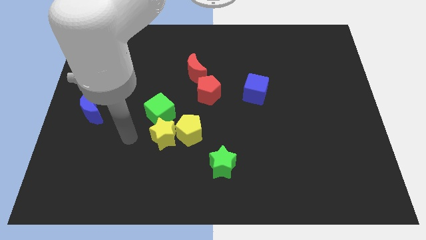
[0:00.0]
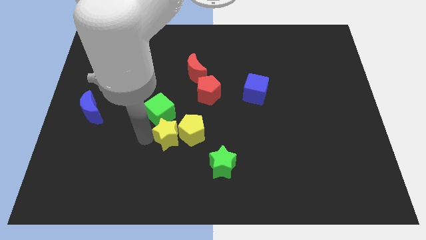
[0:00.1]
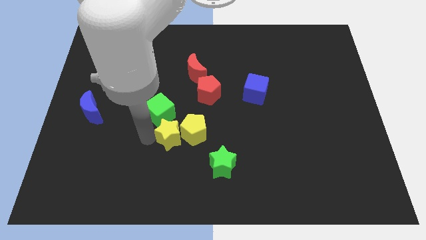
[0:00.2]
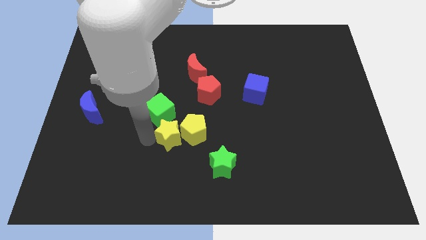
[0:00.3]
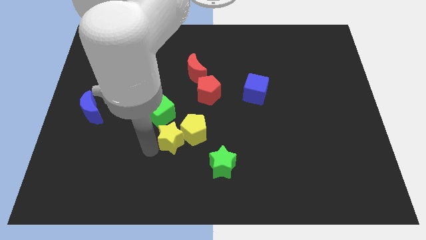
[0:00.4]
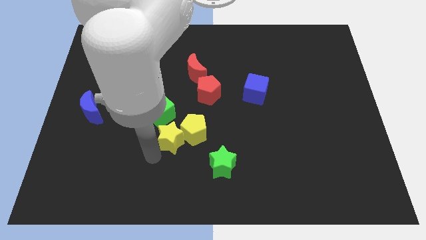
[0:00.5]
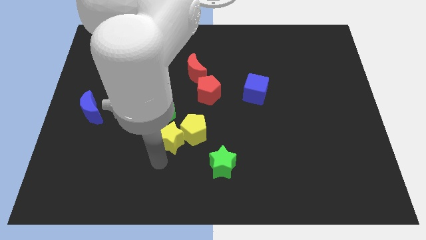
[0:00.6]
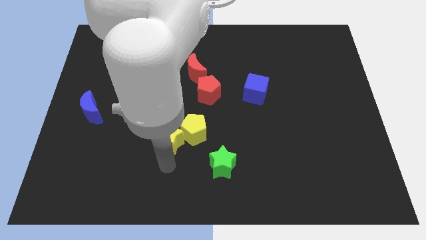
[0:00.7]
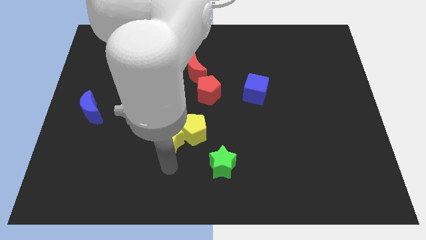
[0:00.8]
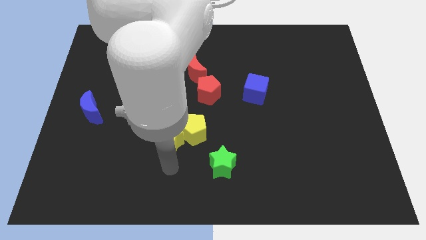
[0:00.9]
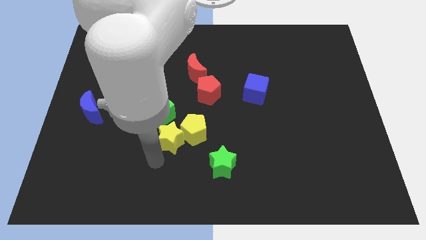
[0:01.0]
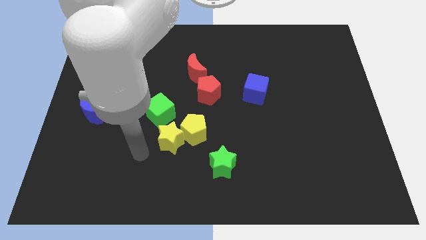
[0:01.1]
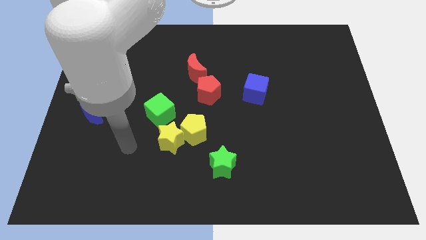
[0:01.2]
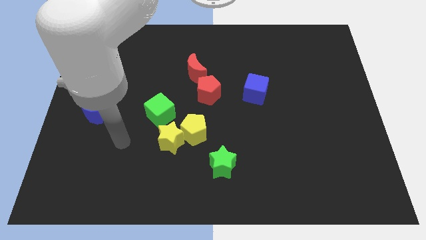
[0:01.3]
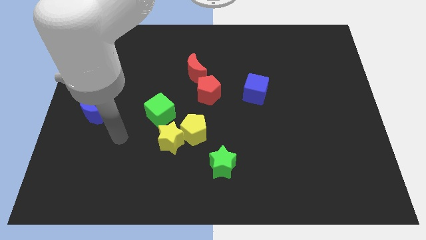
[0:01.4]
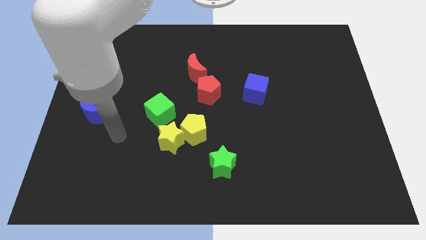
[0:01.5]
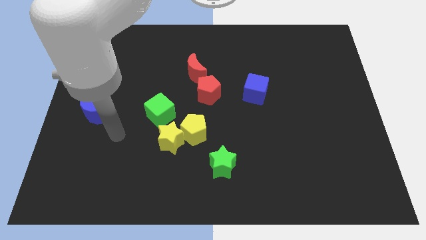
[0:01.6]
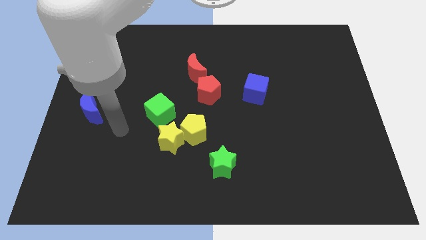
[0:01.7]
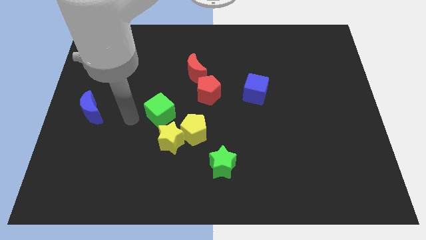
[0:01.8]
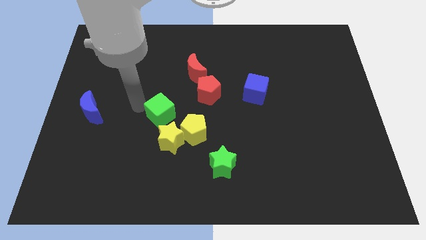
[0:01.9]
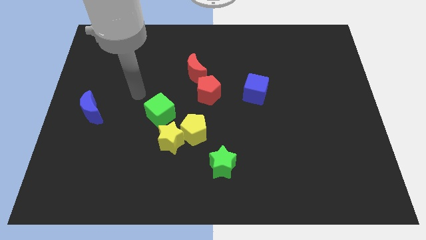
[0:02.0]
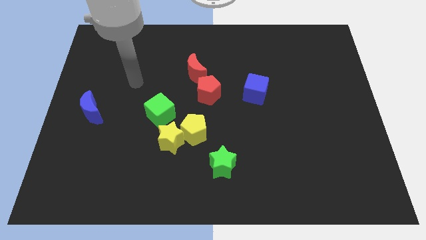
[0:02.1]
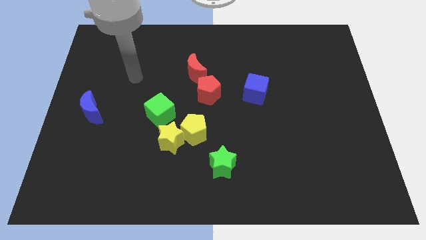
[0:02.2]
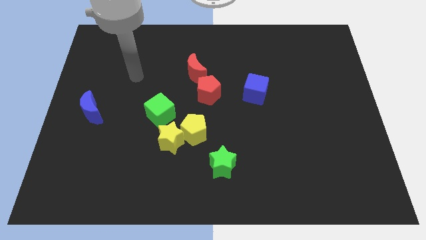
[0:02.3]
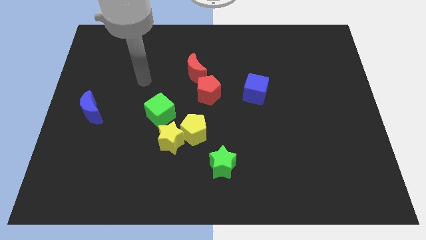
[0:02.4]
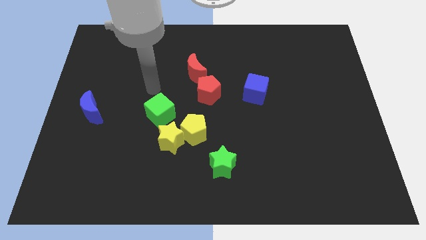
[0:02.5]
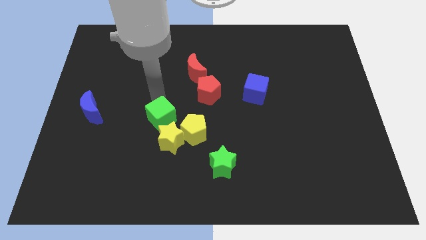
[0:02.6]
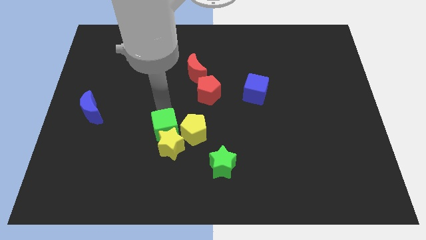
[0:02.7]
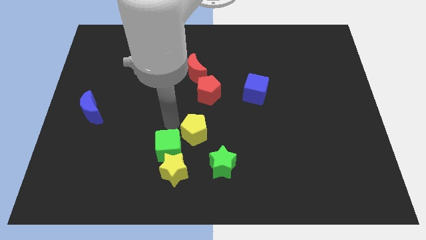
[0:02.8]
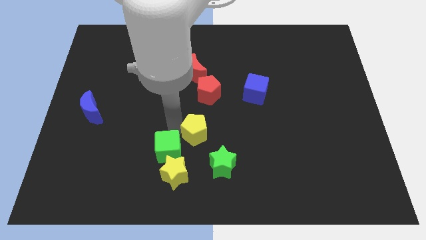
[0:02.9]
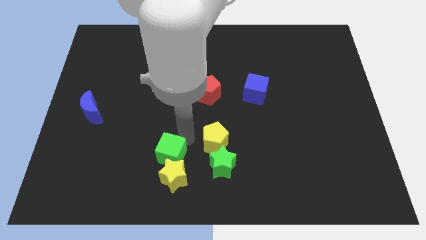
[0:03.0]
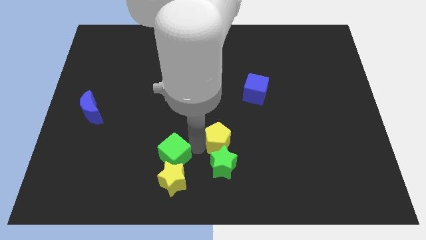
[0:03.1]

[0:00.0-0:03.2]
slightly push the green cube towards the yellow star and yellow pentagon

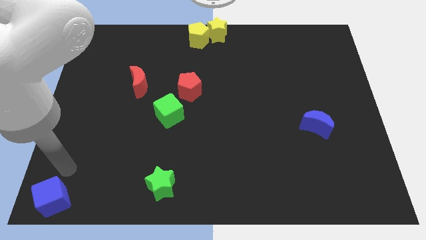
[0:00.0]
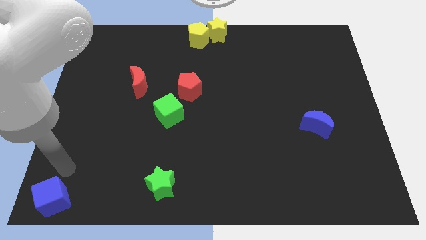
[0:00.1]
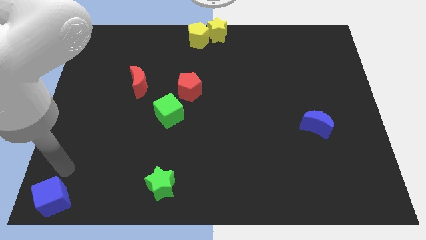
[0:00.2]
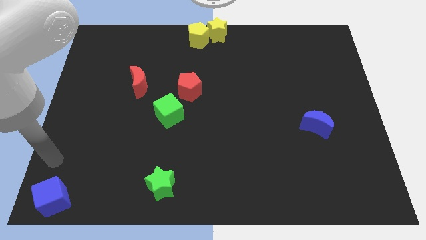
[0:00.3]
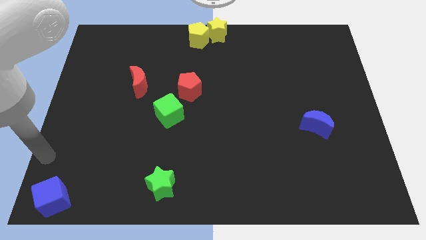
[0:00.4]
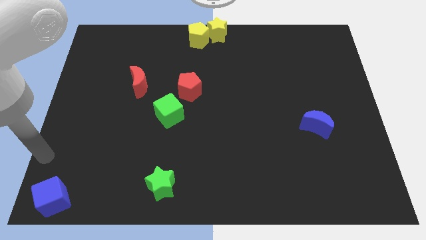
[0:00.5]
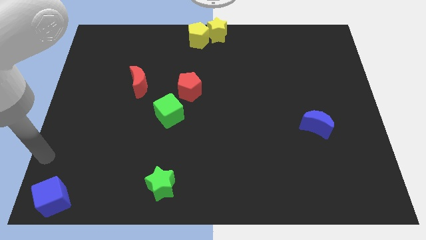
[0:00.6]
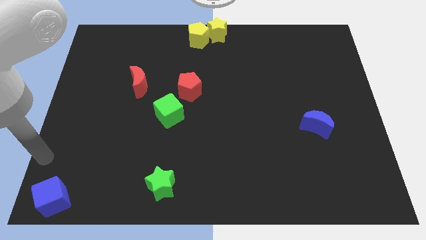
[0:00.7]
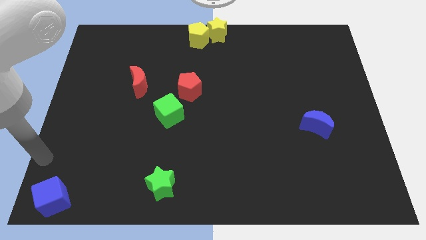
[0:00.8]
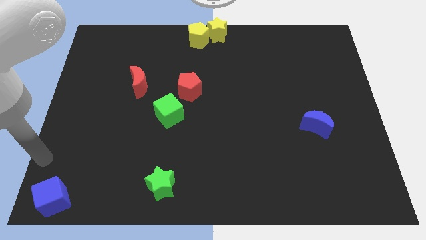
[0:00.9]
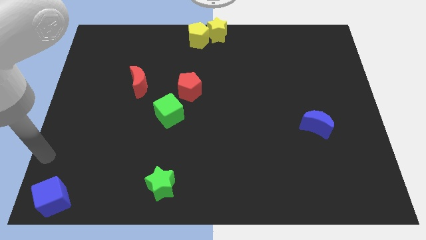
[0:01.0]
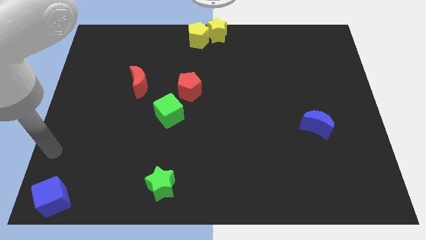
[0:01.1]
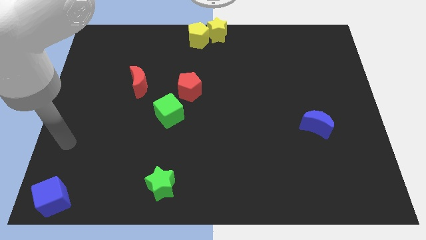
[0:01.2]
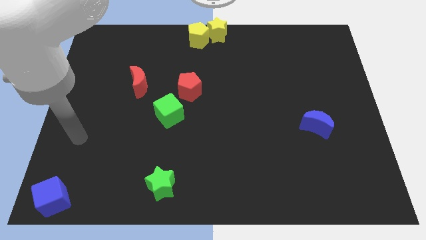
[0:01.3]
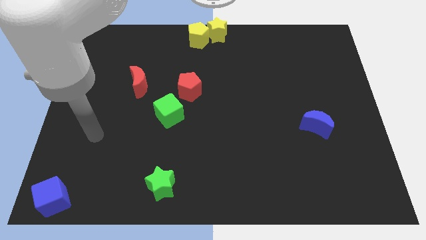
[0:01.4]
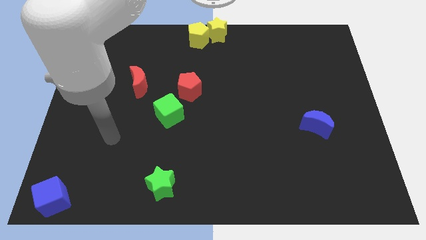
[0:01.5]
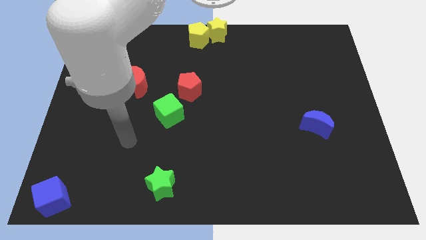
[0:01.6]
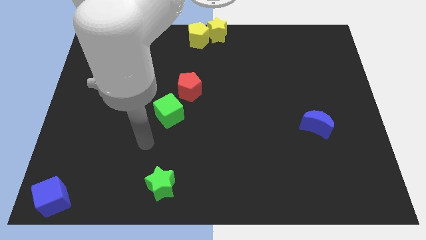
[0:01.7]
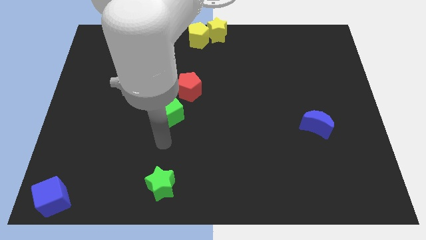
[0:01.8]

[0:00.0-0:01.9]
point your arm between green blocks

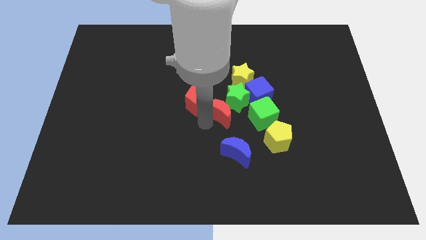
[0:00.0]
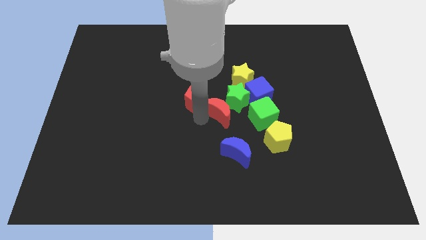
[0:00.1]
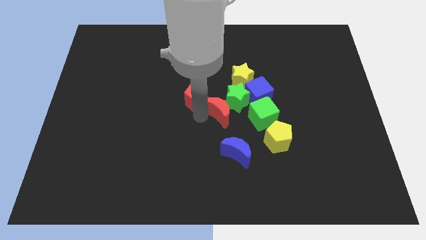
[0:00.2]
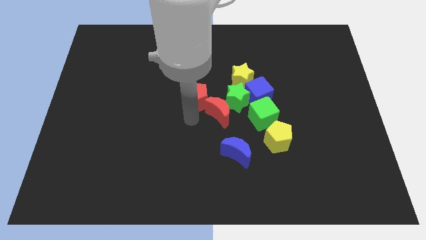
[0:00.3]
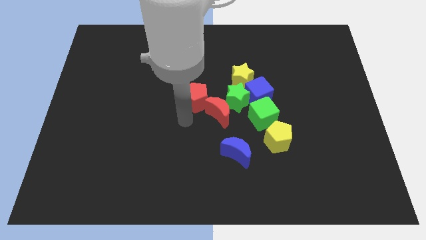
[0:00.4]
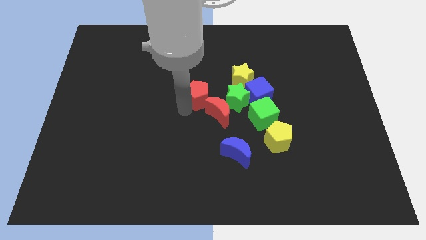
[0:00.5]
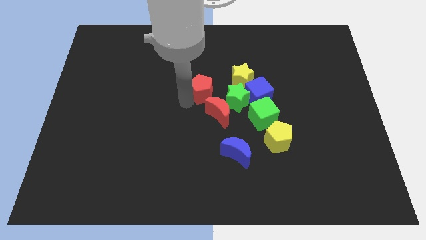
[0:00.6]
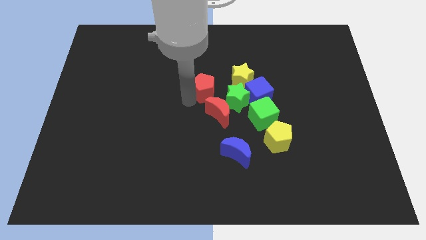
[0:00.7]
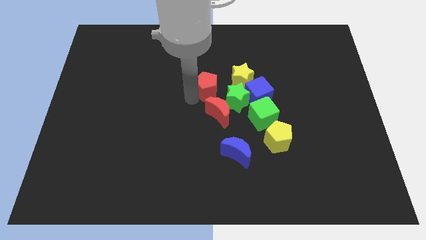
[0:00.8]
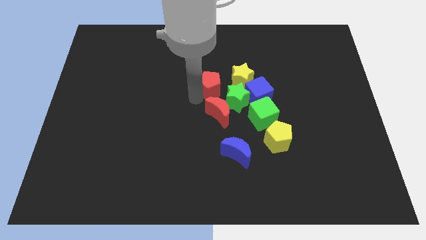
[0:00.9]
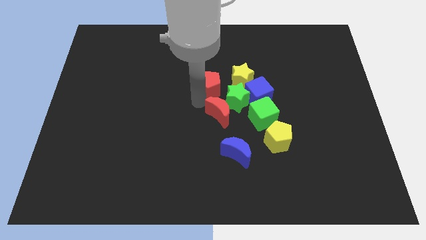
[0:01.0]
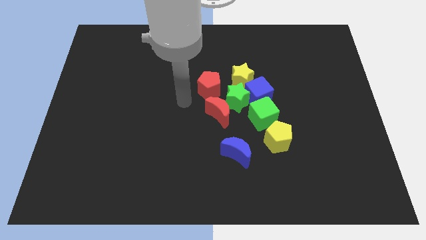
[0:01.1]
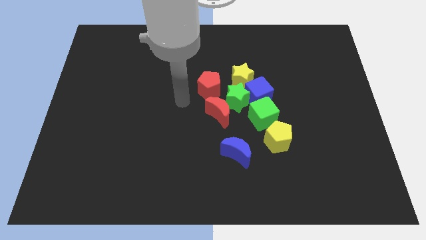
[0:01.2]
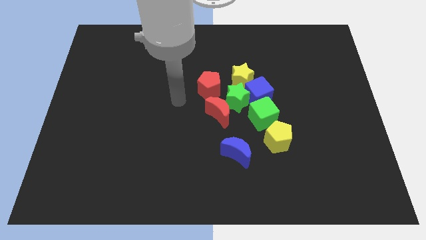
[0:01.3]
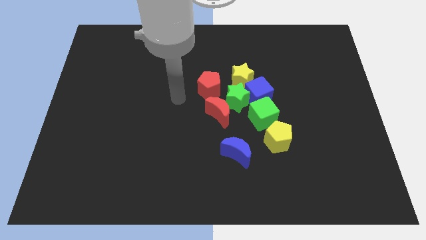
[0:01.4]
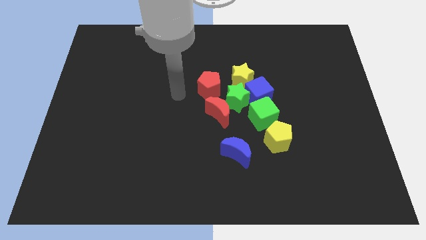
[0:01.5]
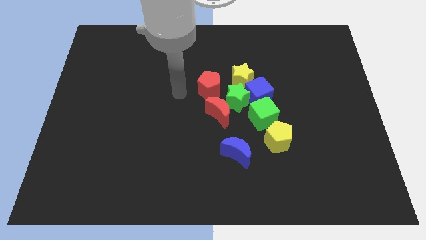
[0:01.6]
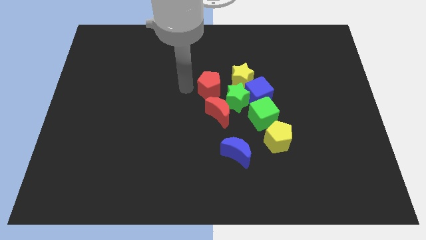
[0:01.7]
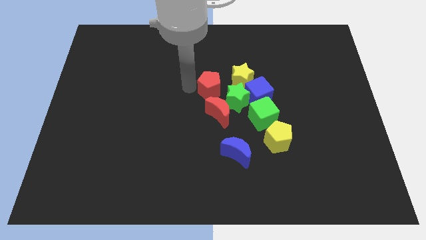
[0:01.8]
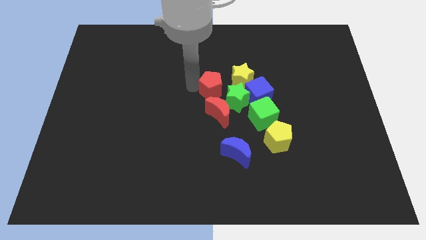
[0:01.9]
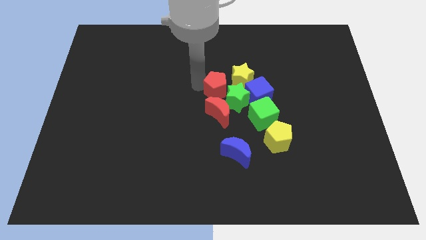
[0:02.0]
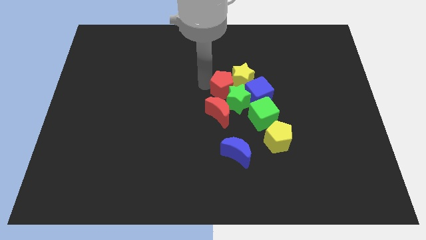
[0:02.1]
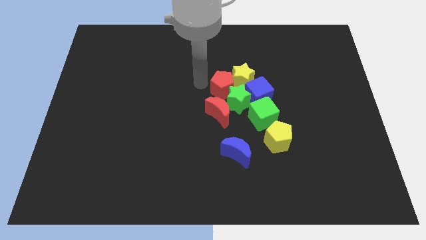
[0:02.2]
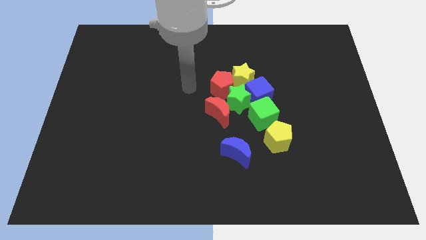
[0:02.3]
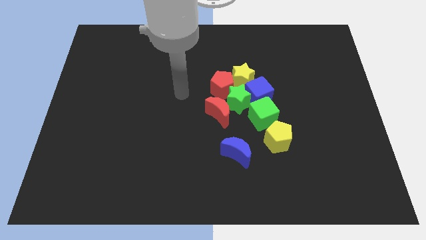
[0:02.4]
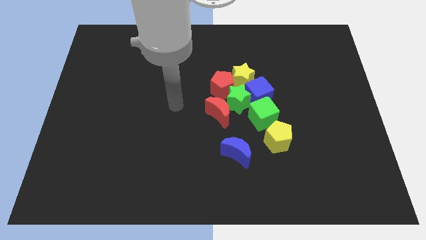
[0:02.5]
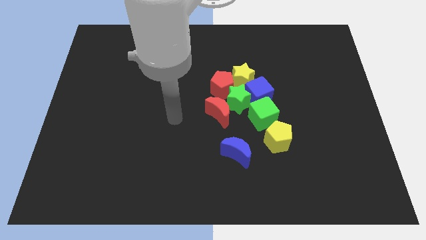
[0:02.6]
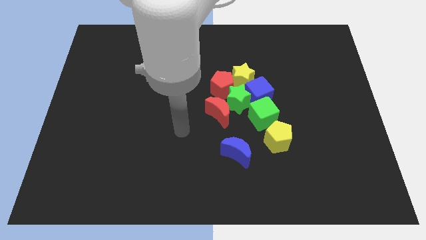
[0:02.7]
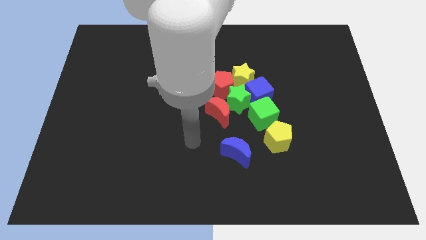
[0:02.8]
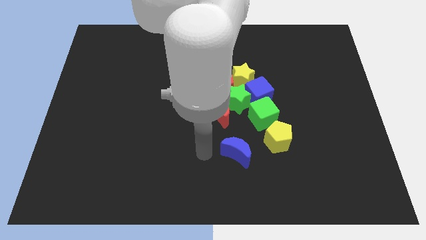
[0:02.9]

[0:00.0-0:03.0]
place the red pentagon on top of the red crescent

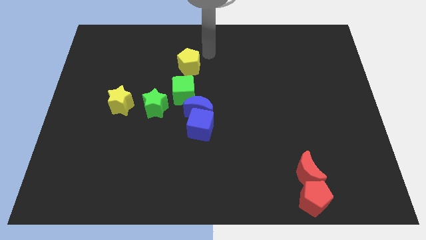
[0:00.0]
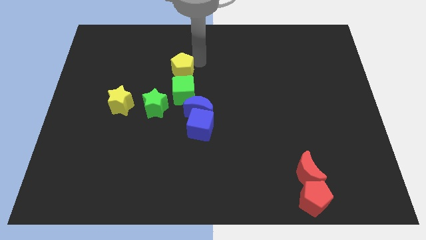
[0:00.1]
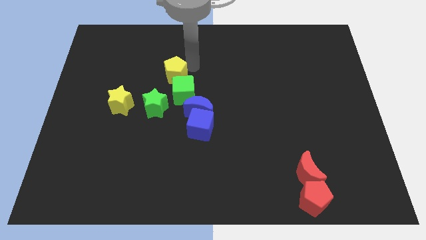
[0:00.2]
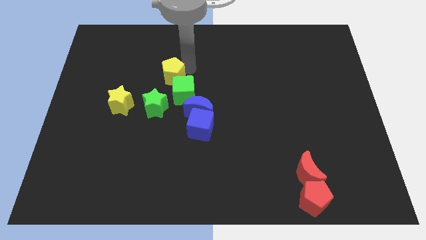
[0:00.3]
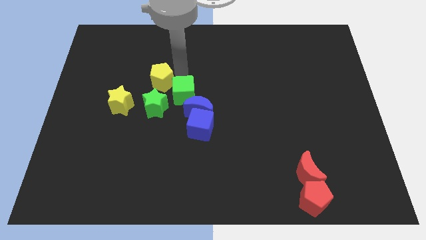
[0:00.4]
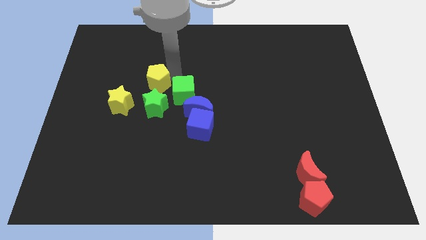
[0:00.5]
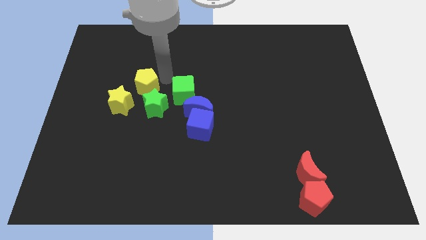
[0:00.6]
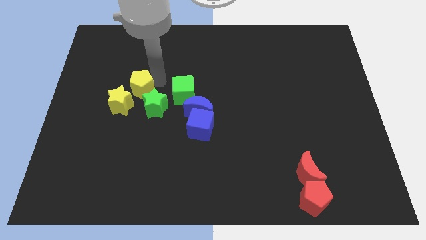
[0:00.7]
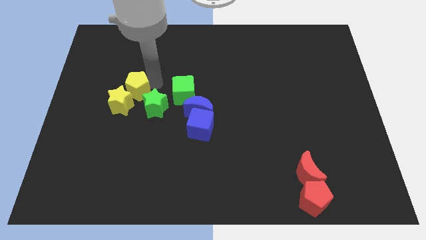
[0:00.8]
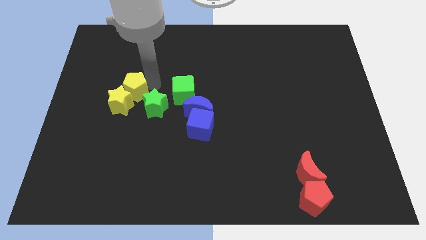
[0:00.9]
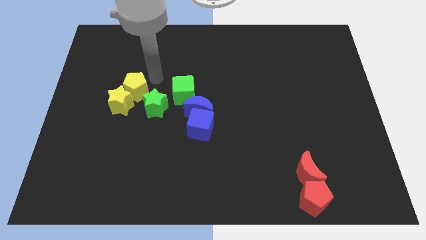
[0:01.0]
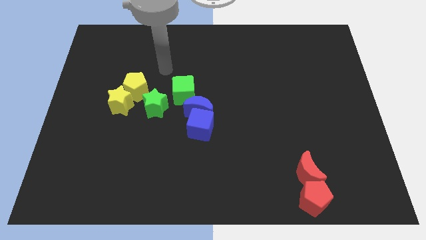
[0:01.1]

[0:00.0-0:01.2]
drag the yellow pentagon into the top side of the yellow star
